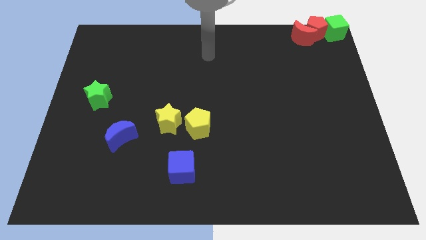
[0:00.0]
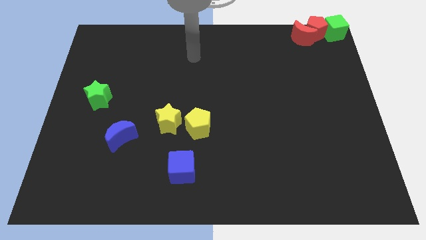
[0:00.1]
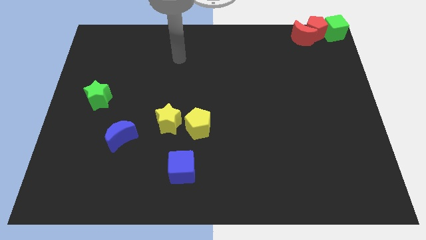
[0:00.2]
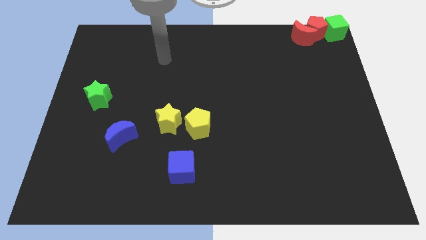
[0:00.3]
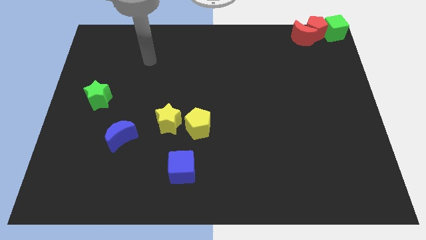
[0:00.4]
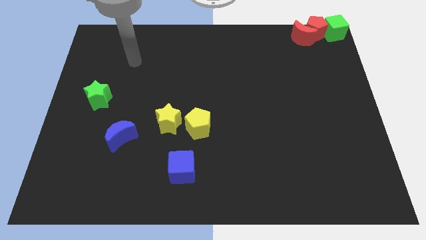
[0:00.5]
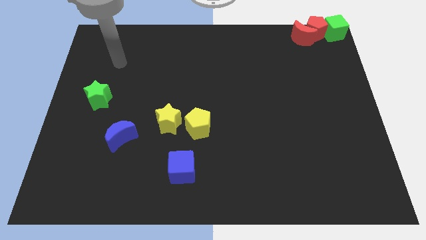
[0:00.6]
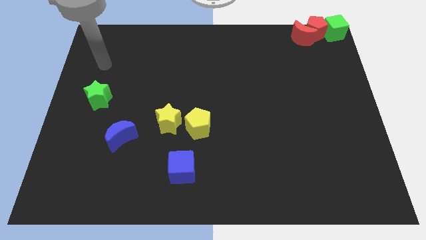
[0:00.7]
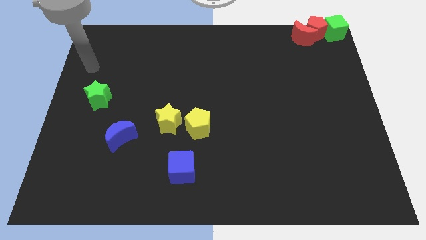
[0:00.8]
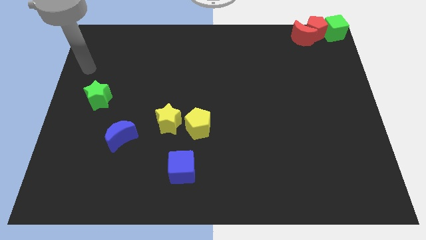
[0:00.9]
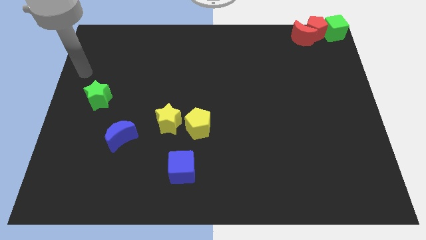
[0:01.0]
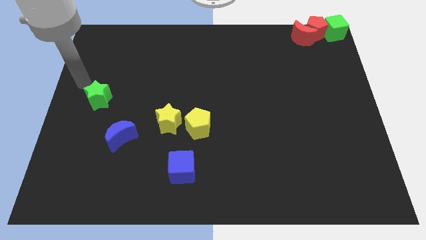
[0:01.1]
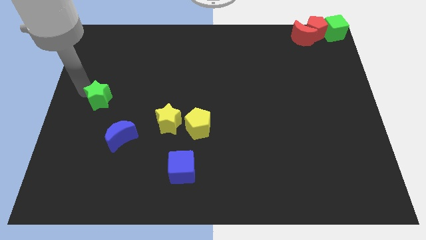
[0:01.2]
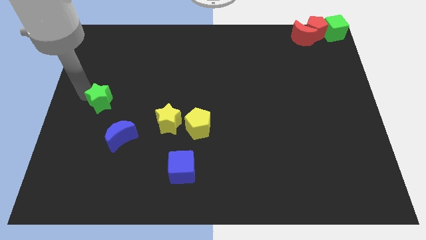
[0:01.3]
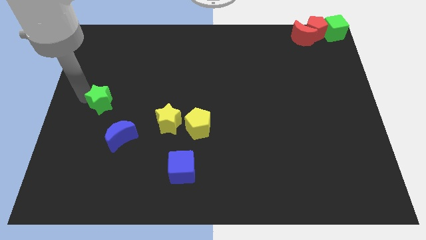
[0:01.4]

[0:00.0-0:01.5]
place the arm above the green star

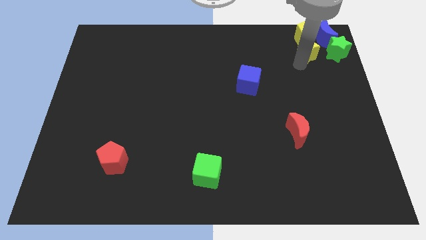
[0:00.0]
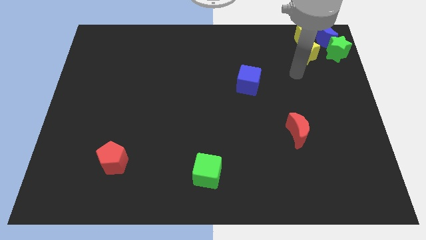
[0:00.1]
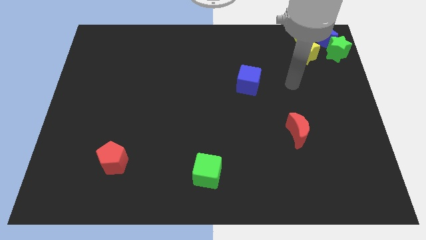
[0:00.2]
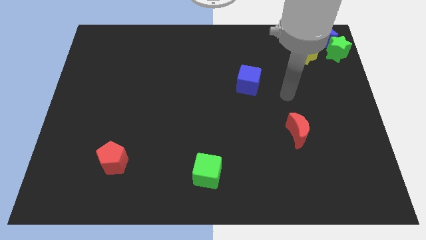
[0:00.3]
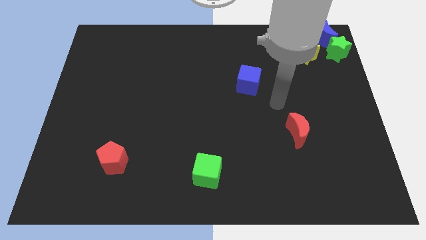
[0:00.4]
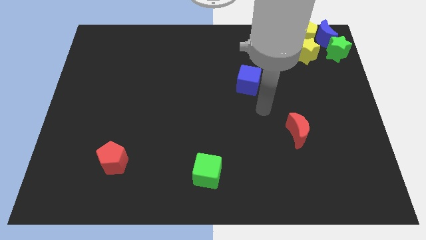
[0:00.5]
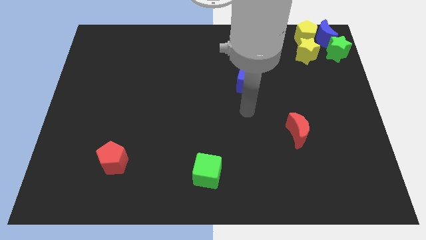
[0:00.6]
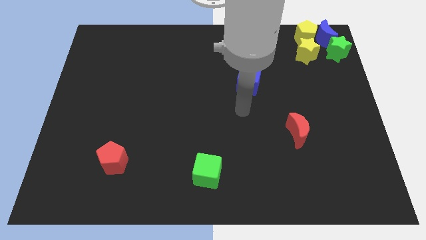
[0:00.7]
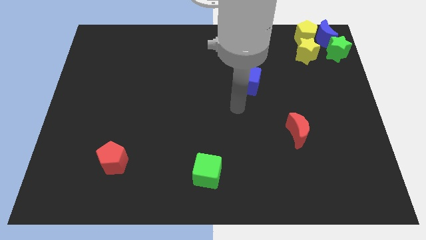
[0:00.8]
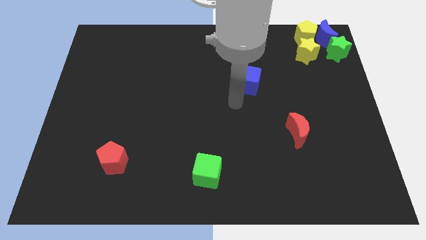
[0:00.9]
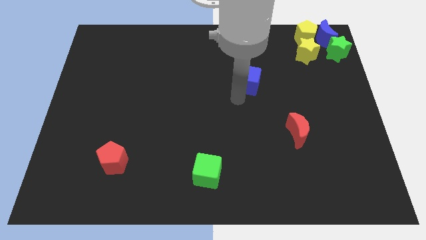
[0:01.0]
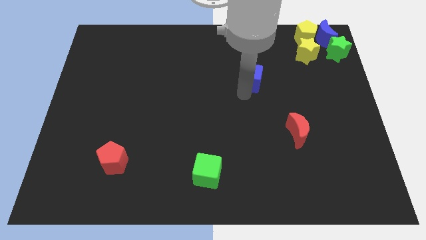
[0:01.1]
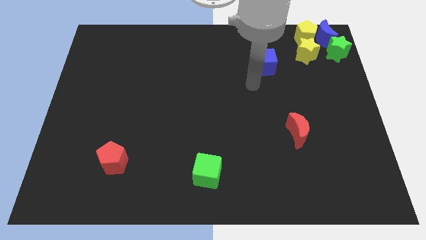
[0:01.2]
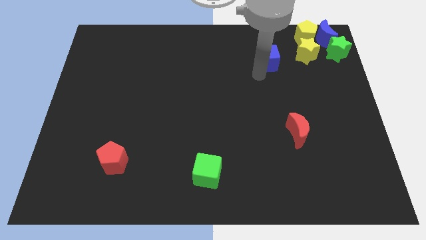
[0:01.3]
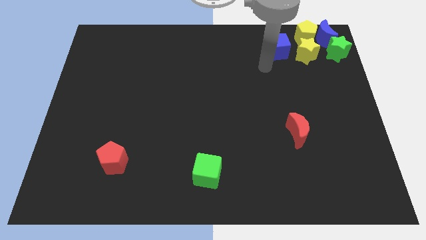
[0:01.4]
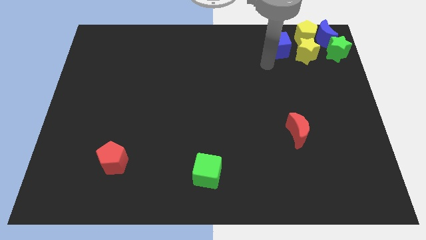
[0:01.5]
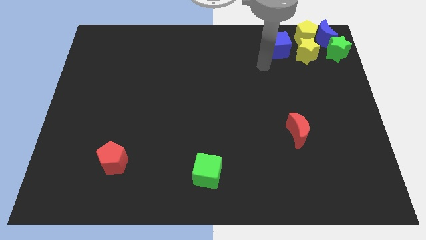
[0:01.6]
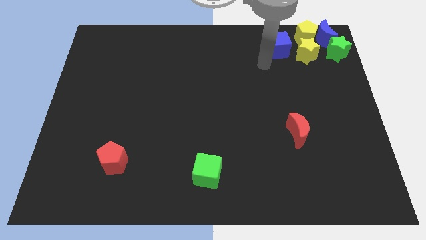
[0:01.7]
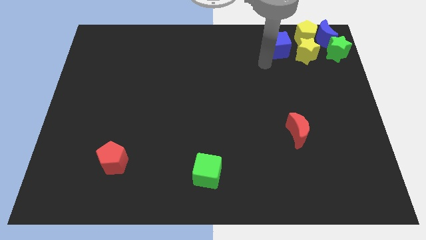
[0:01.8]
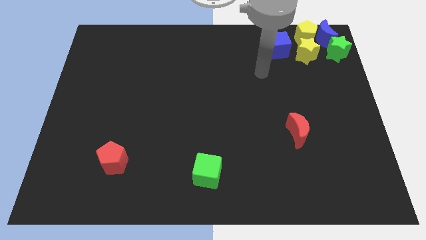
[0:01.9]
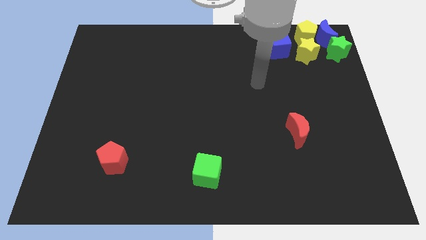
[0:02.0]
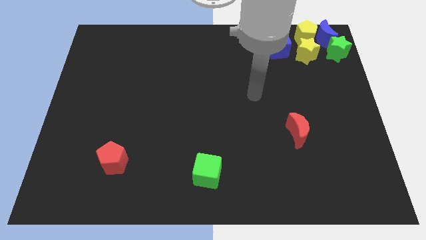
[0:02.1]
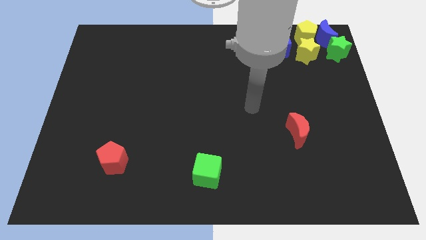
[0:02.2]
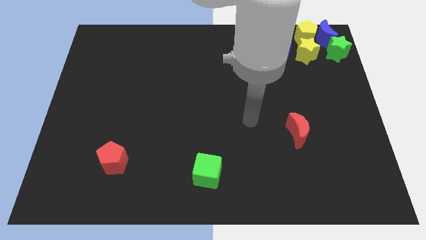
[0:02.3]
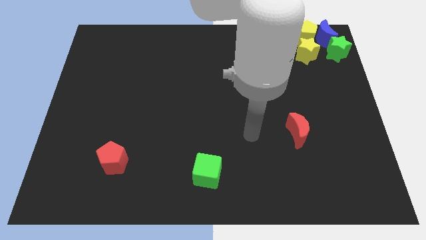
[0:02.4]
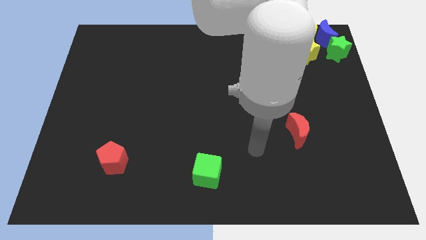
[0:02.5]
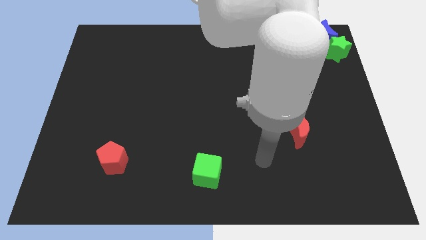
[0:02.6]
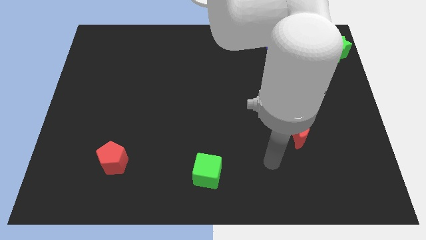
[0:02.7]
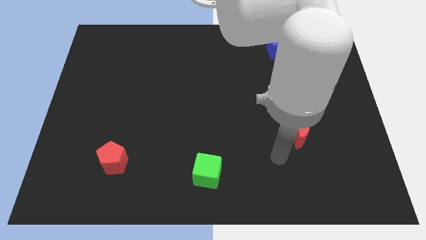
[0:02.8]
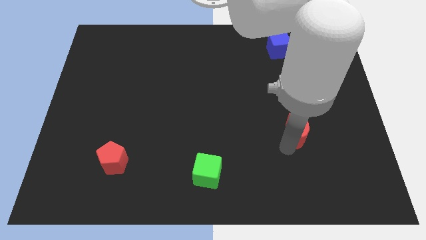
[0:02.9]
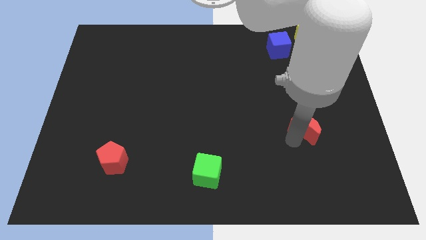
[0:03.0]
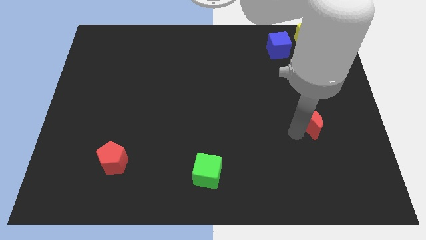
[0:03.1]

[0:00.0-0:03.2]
put the blue cube on the left side of the yellow star

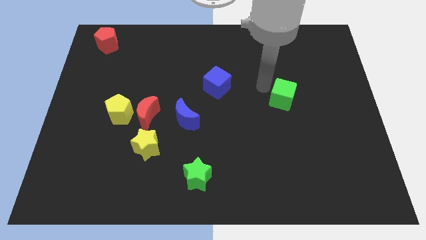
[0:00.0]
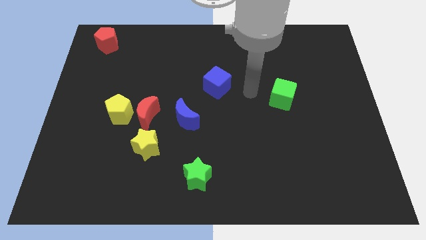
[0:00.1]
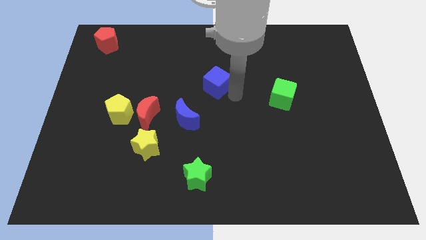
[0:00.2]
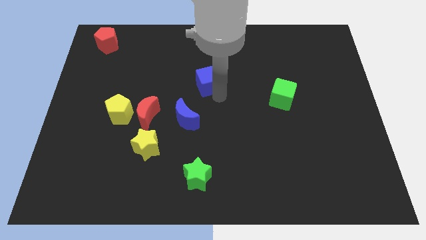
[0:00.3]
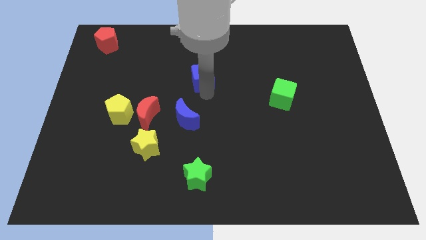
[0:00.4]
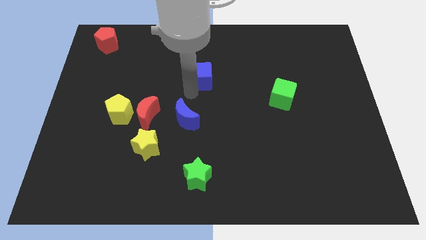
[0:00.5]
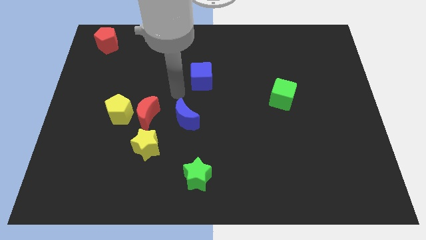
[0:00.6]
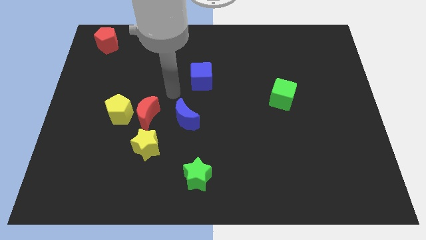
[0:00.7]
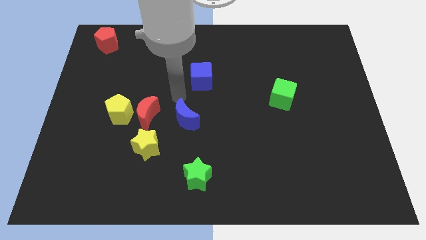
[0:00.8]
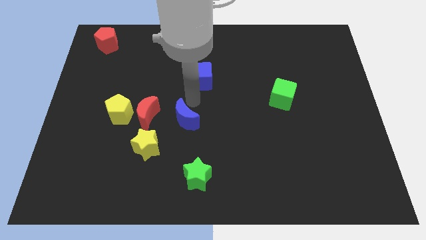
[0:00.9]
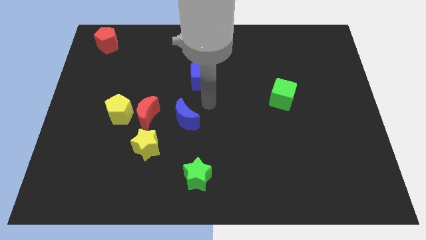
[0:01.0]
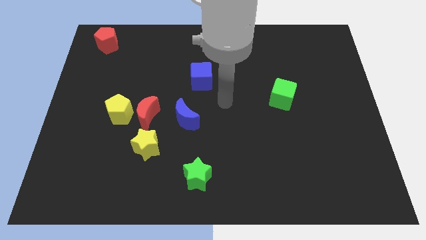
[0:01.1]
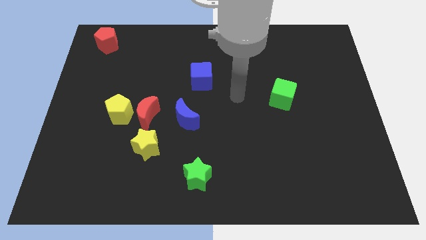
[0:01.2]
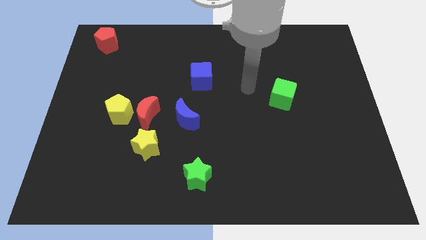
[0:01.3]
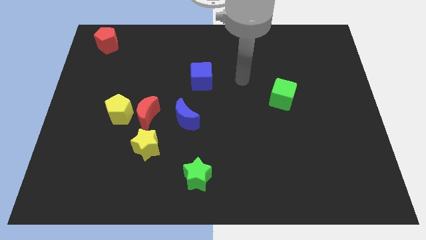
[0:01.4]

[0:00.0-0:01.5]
slightly move the blue cube upwards

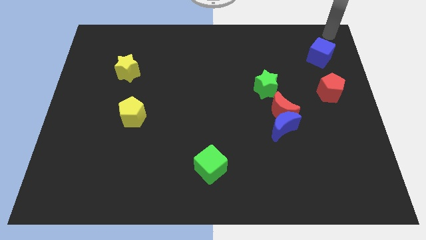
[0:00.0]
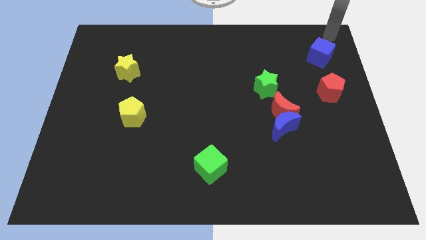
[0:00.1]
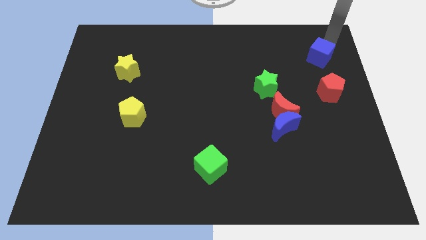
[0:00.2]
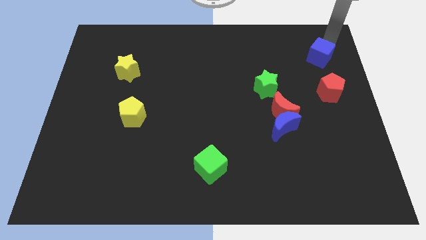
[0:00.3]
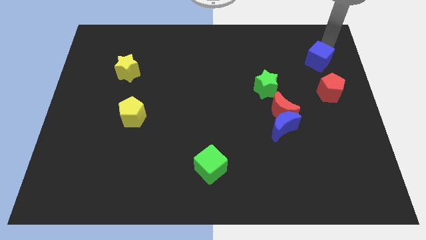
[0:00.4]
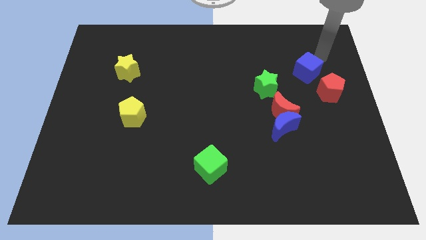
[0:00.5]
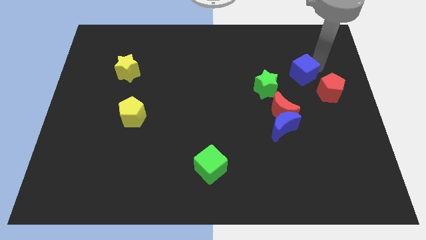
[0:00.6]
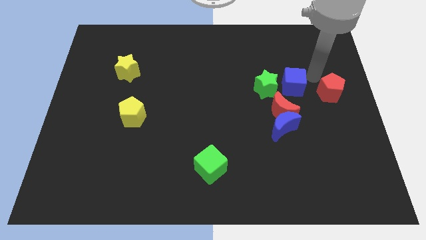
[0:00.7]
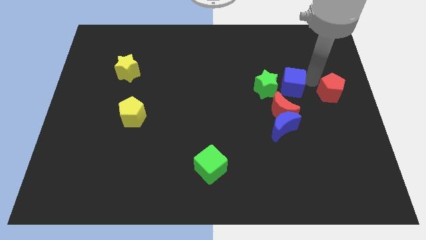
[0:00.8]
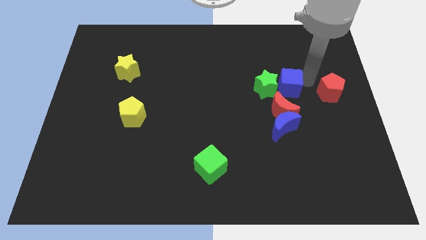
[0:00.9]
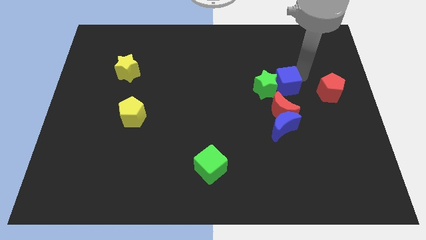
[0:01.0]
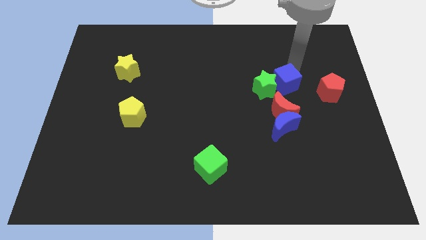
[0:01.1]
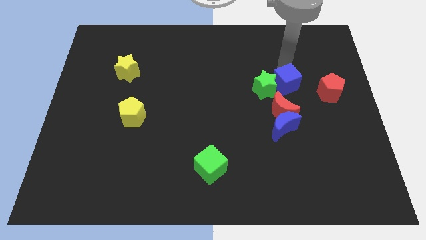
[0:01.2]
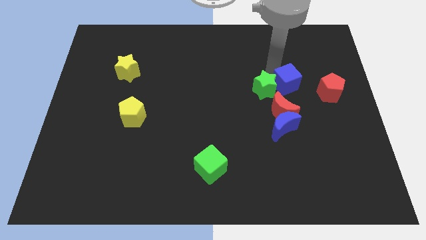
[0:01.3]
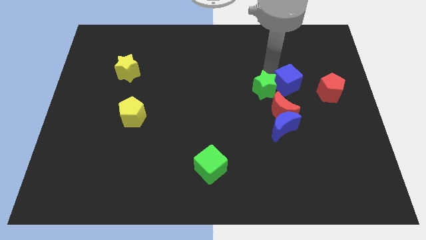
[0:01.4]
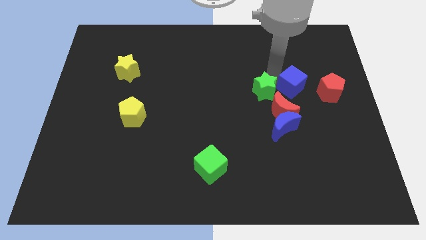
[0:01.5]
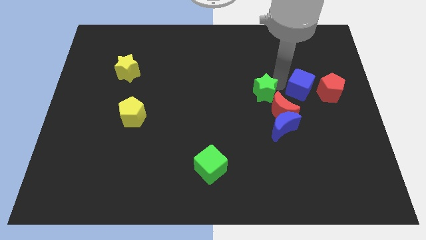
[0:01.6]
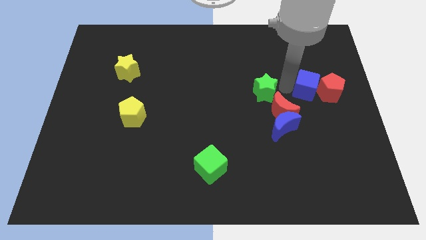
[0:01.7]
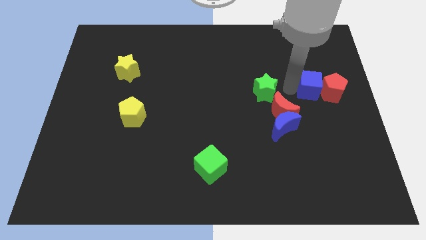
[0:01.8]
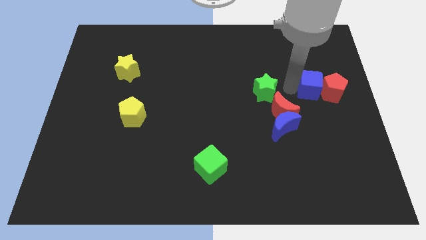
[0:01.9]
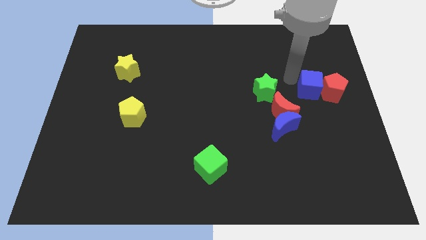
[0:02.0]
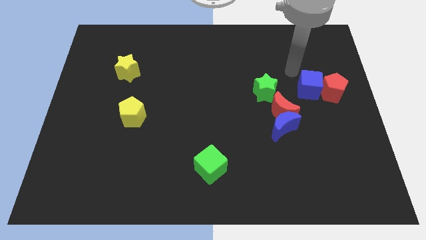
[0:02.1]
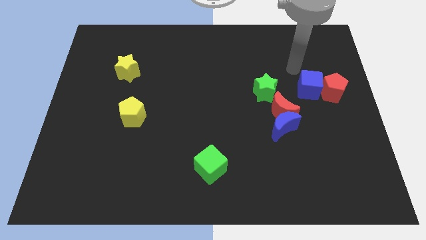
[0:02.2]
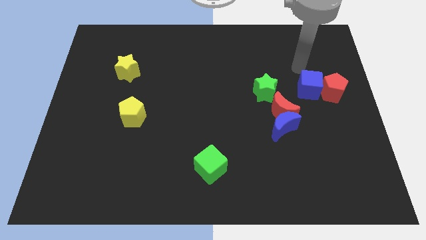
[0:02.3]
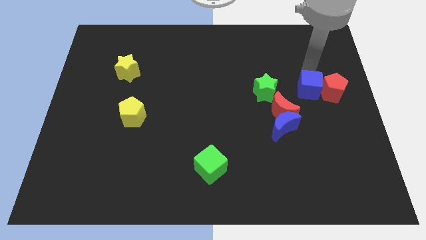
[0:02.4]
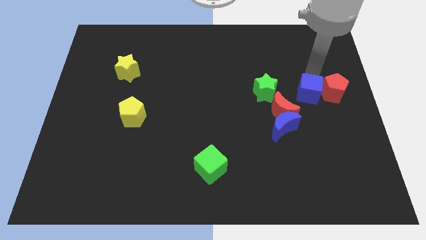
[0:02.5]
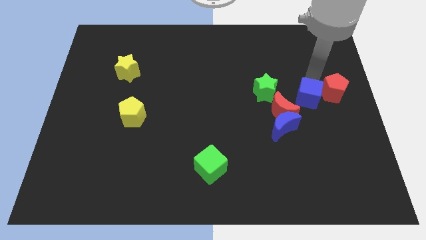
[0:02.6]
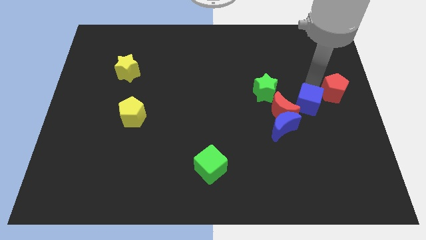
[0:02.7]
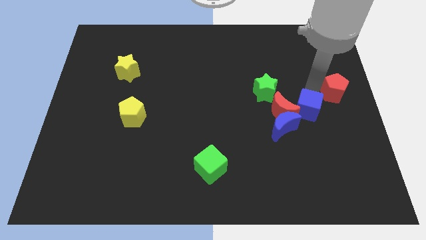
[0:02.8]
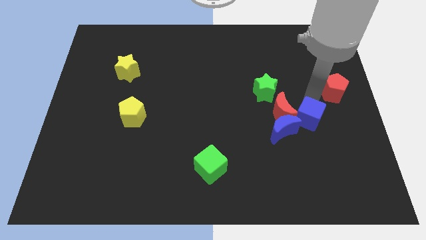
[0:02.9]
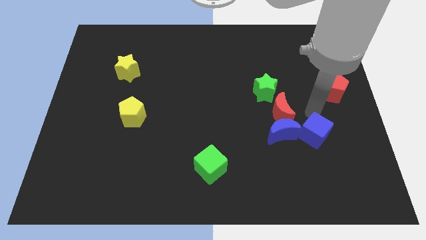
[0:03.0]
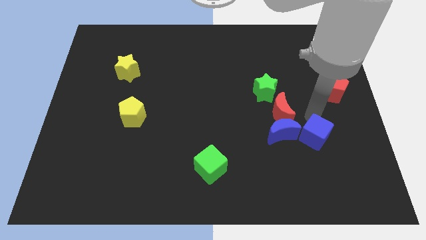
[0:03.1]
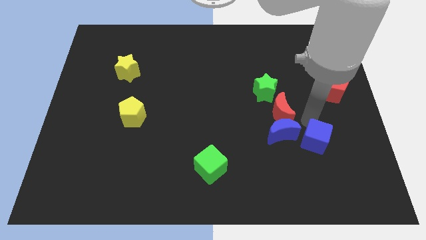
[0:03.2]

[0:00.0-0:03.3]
move the blue cube to the right of the blue crescent
